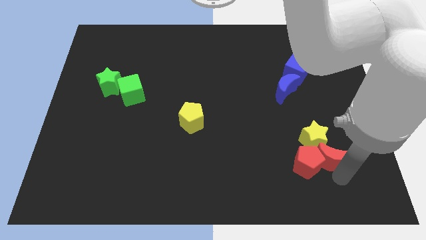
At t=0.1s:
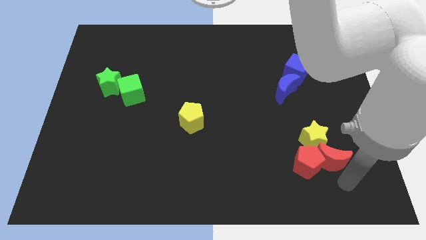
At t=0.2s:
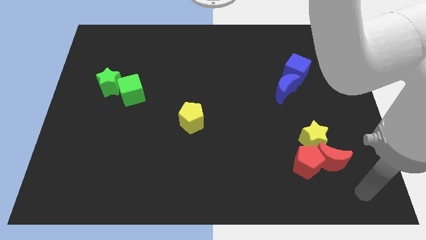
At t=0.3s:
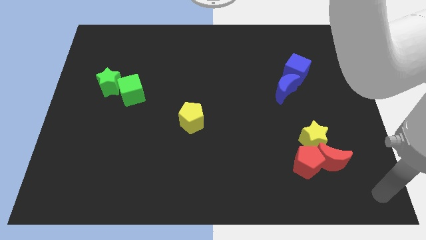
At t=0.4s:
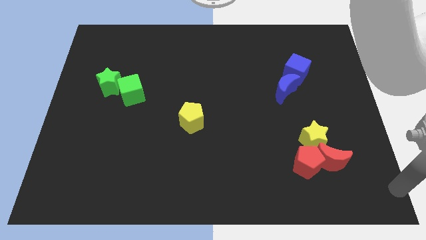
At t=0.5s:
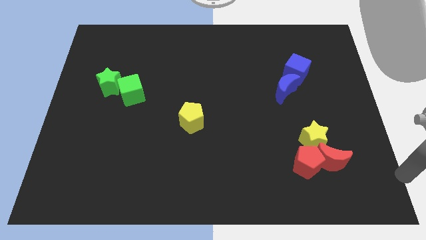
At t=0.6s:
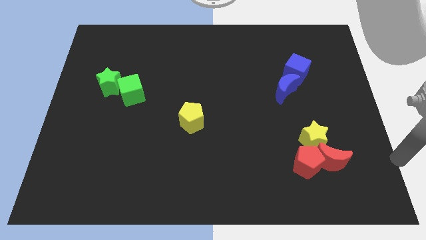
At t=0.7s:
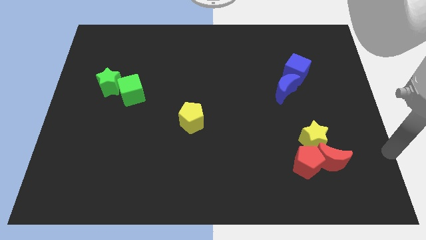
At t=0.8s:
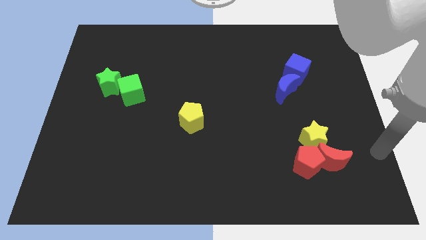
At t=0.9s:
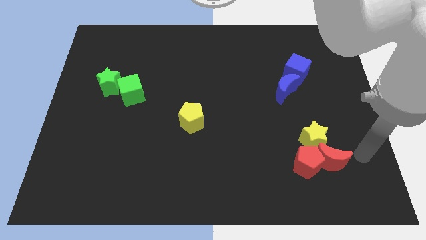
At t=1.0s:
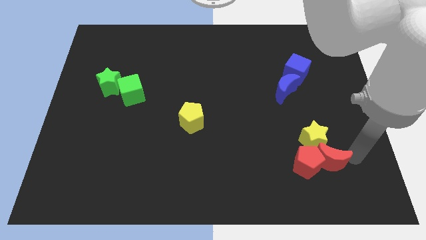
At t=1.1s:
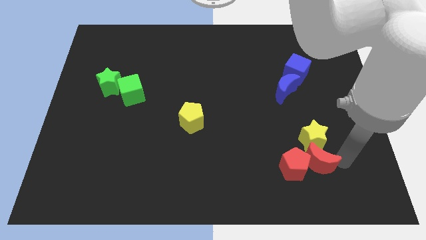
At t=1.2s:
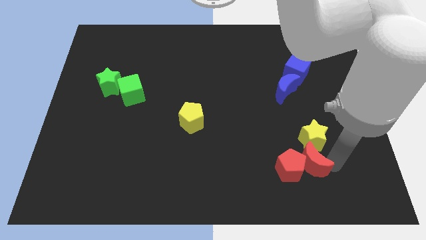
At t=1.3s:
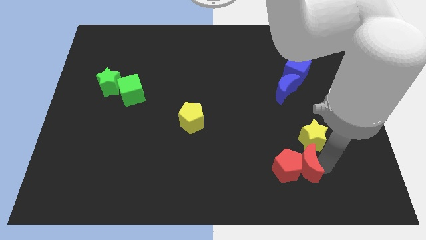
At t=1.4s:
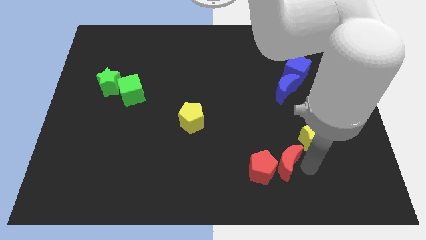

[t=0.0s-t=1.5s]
push the red crescent along with the red pentagon slightly to the left

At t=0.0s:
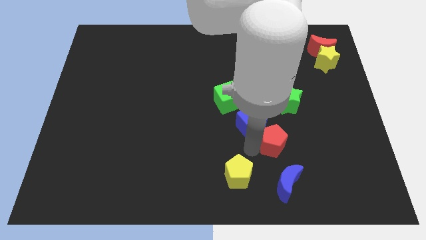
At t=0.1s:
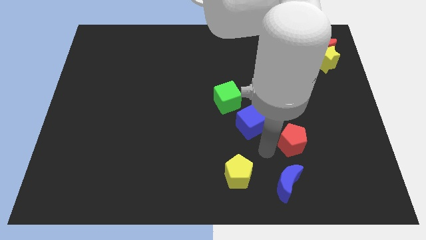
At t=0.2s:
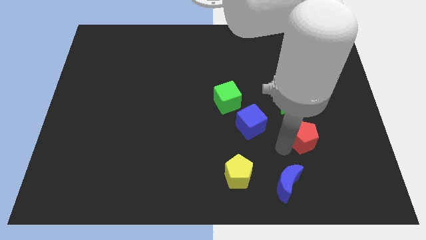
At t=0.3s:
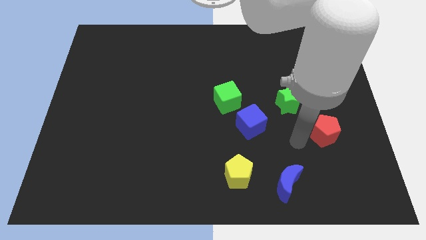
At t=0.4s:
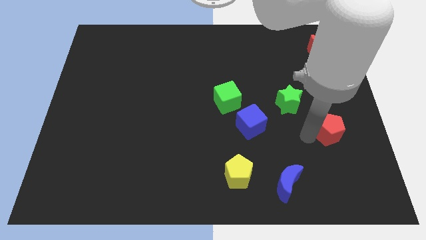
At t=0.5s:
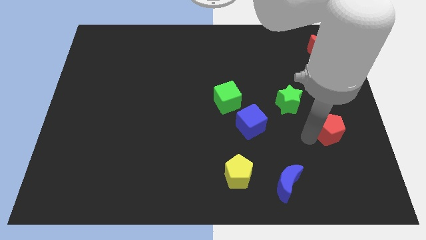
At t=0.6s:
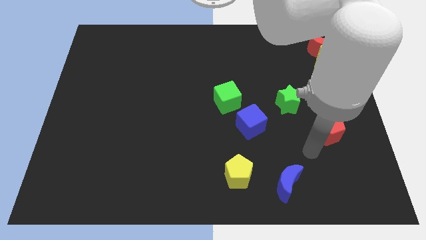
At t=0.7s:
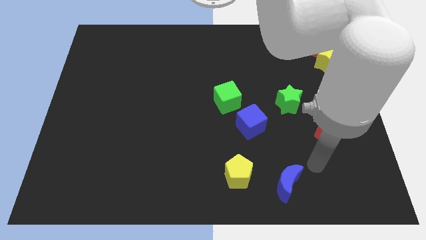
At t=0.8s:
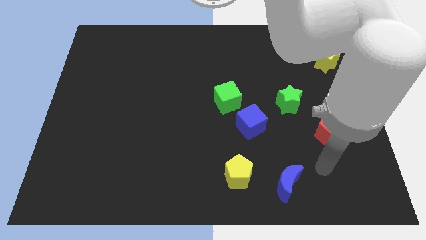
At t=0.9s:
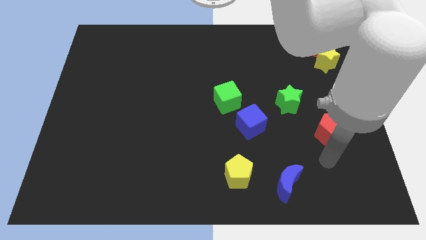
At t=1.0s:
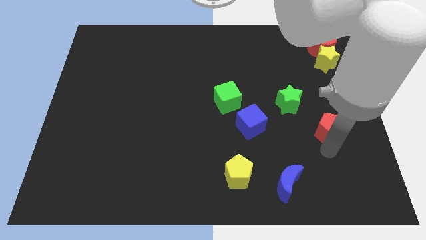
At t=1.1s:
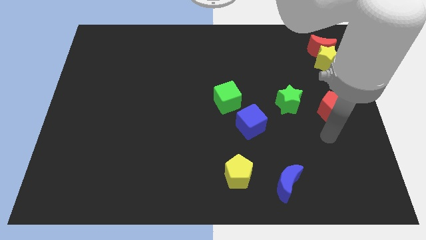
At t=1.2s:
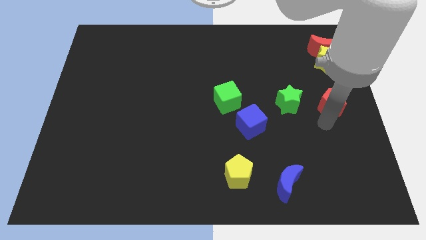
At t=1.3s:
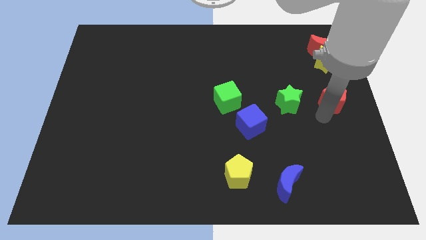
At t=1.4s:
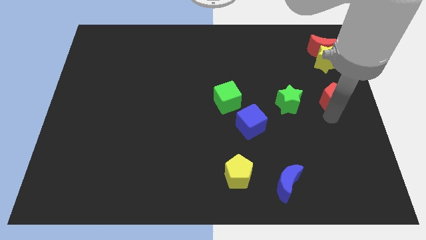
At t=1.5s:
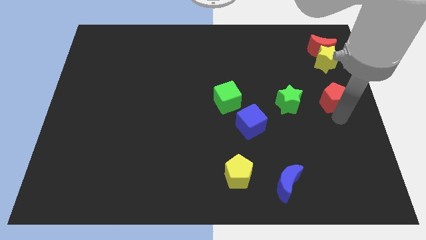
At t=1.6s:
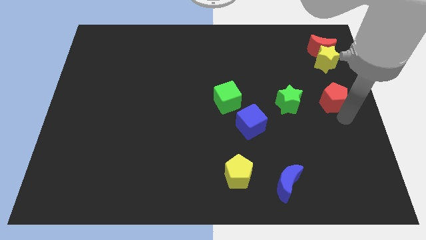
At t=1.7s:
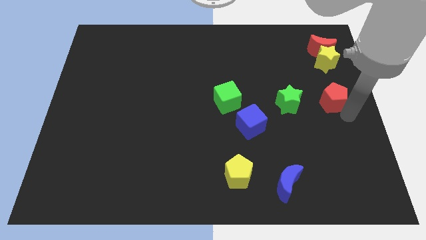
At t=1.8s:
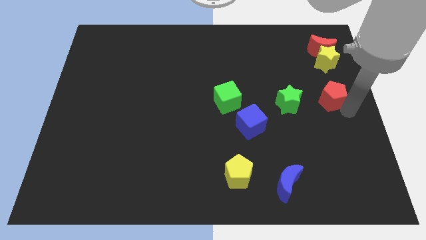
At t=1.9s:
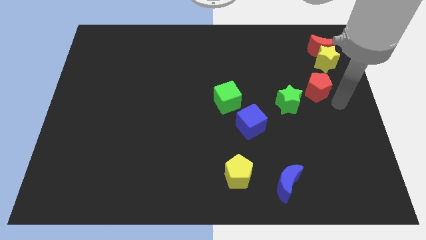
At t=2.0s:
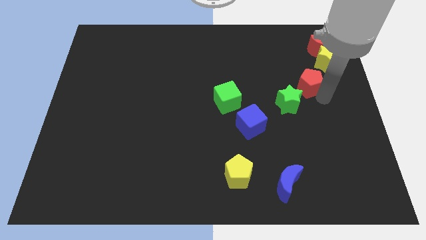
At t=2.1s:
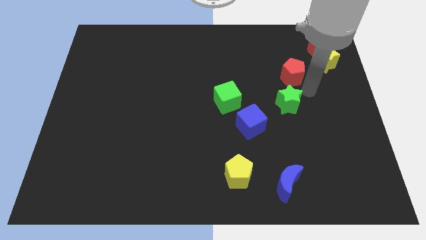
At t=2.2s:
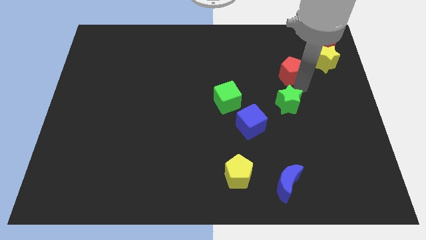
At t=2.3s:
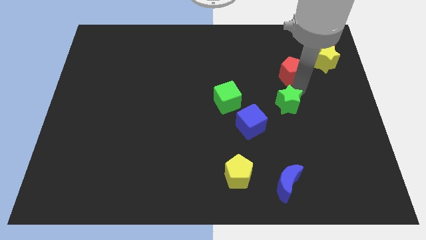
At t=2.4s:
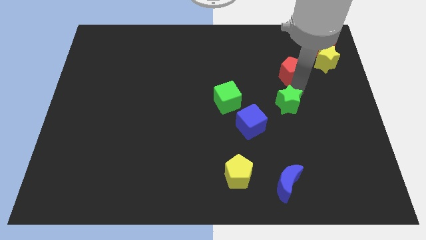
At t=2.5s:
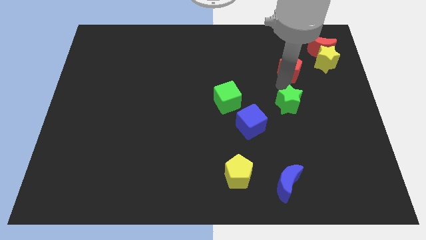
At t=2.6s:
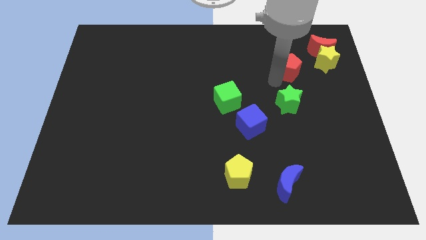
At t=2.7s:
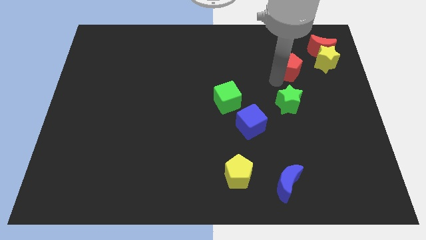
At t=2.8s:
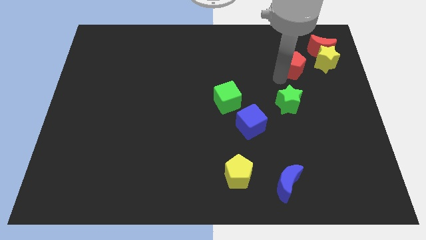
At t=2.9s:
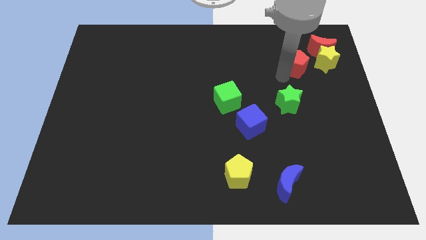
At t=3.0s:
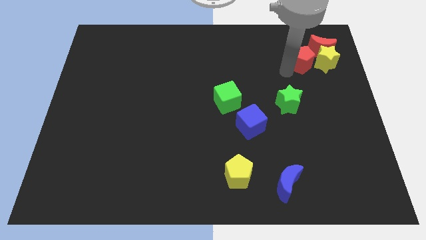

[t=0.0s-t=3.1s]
place red pentagon to left of yellow star

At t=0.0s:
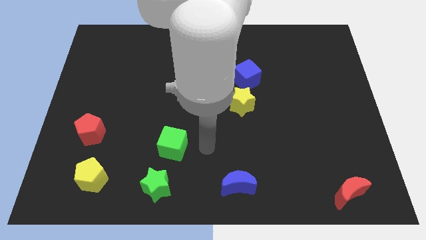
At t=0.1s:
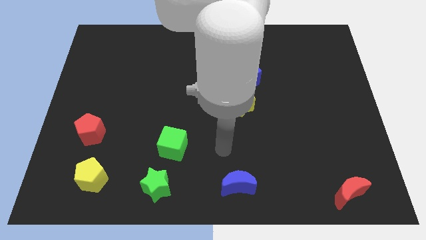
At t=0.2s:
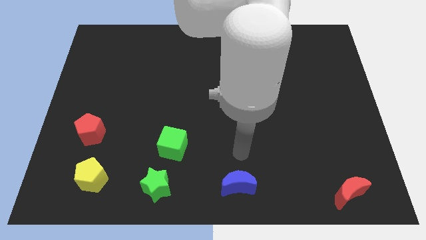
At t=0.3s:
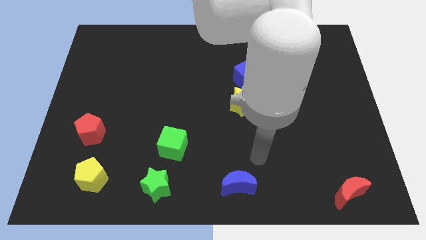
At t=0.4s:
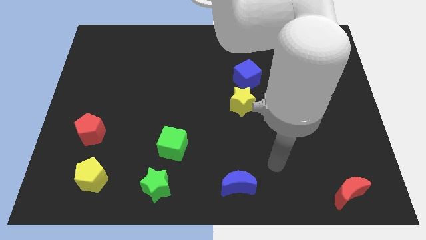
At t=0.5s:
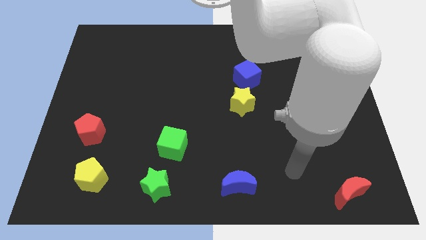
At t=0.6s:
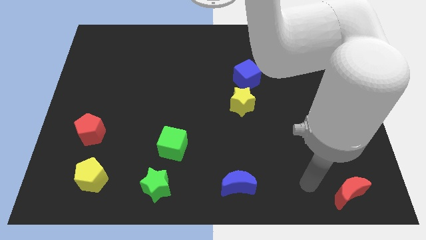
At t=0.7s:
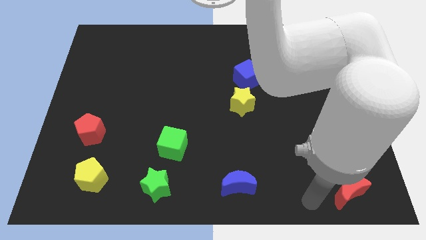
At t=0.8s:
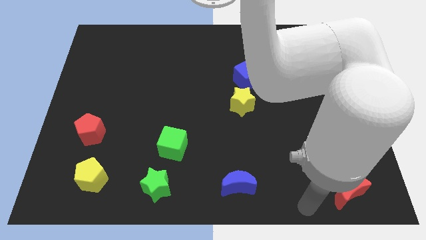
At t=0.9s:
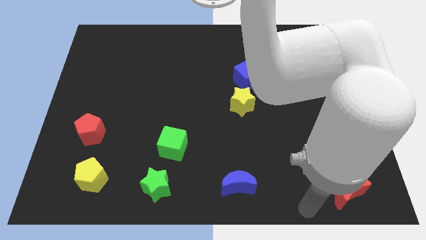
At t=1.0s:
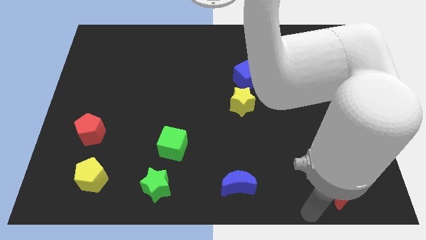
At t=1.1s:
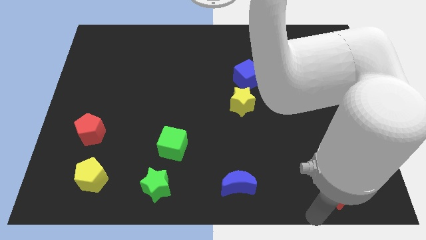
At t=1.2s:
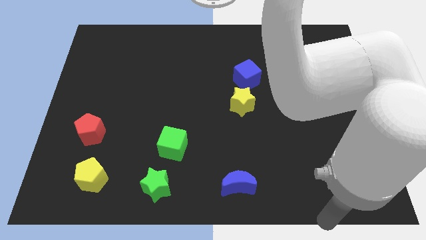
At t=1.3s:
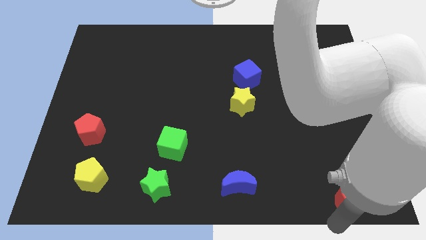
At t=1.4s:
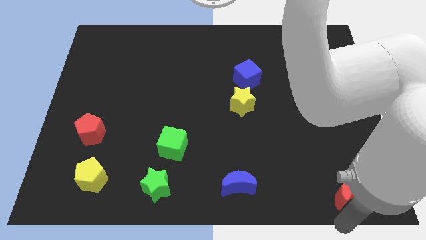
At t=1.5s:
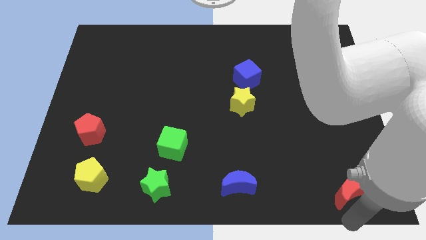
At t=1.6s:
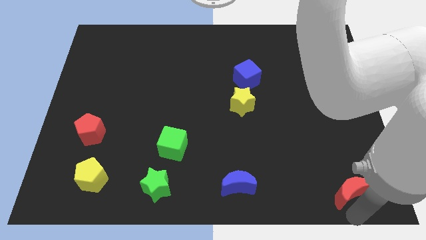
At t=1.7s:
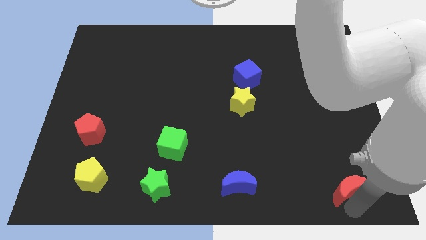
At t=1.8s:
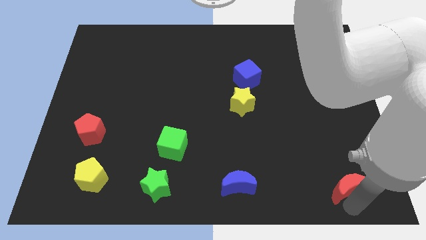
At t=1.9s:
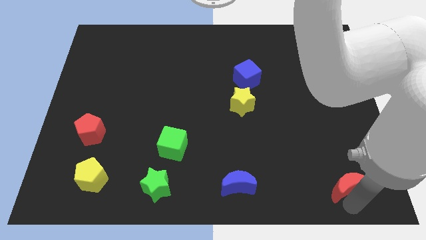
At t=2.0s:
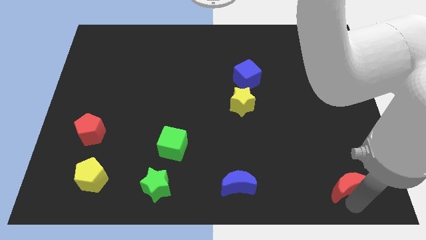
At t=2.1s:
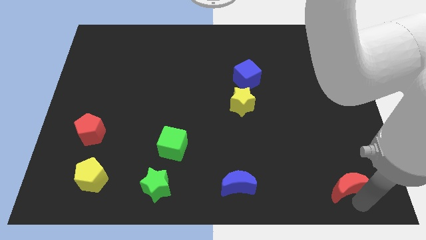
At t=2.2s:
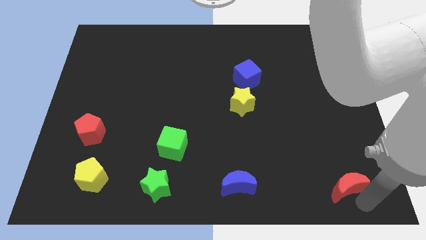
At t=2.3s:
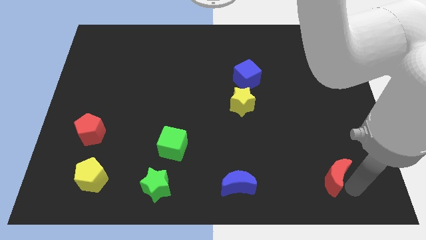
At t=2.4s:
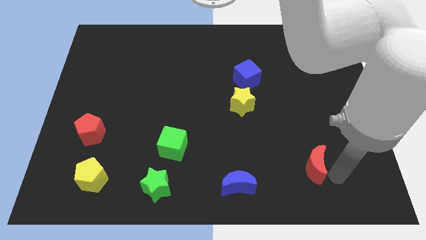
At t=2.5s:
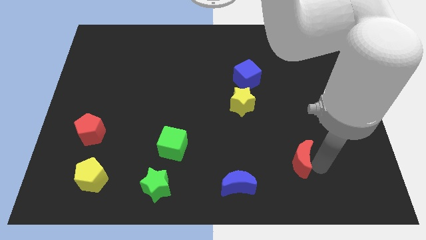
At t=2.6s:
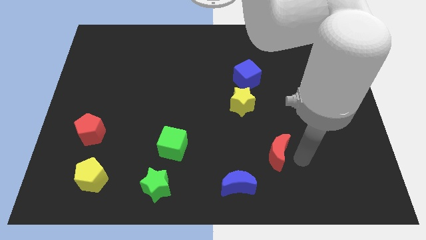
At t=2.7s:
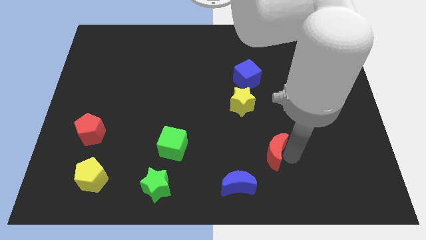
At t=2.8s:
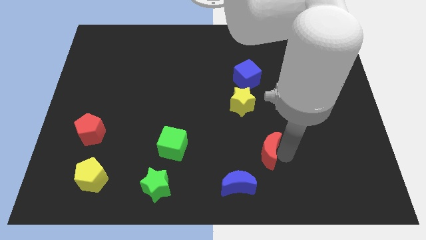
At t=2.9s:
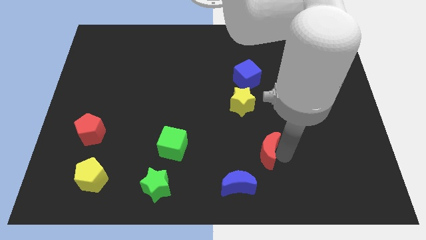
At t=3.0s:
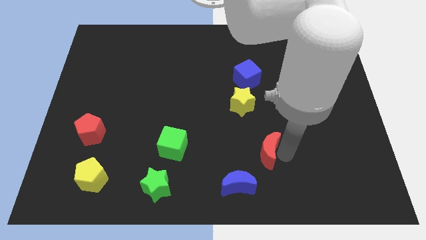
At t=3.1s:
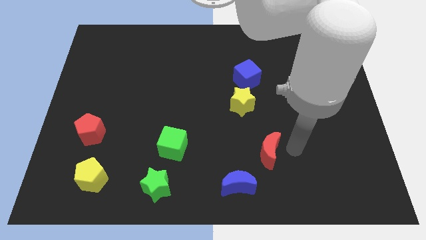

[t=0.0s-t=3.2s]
put the red crescent to the right of the green cube

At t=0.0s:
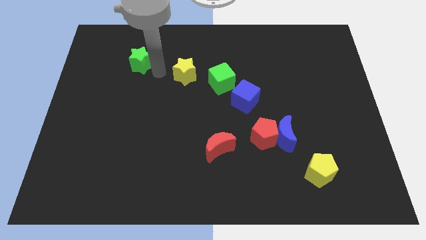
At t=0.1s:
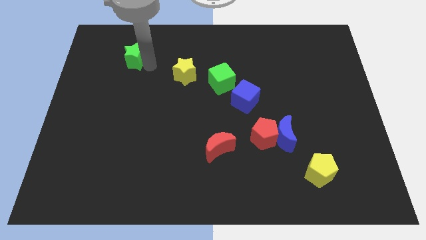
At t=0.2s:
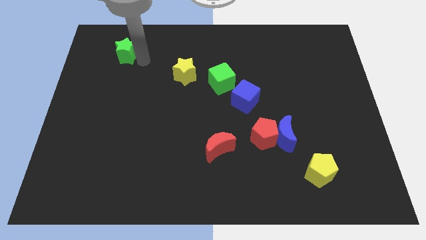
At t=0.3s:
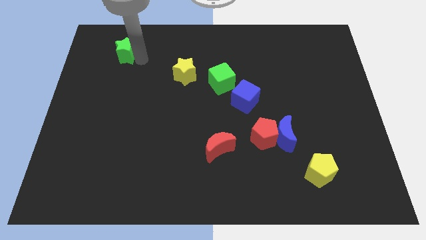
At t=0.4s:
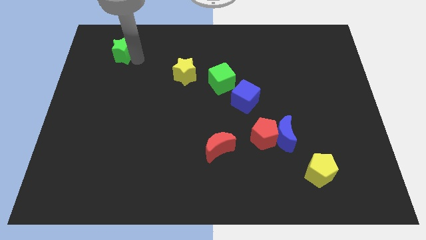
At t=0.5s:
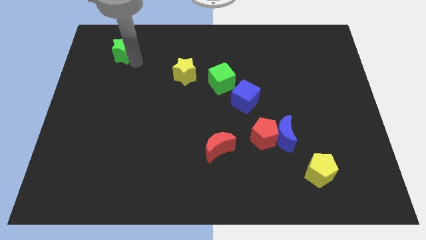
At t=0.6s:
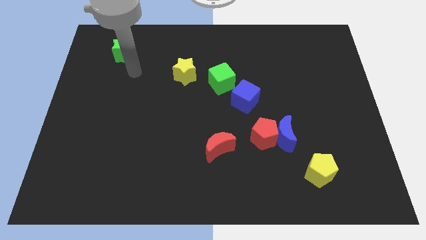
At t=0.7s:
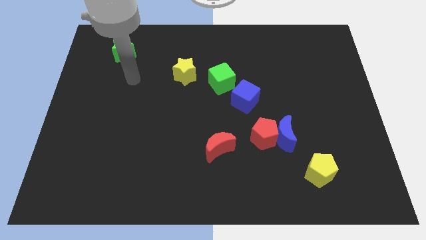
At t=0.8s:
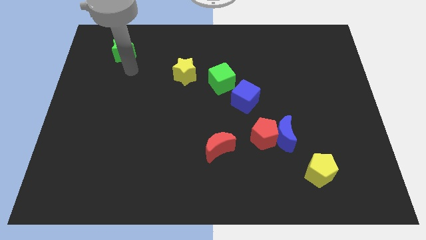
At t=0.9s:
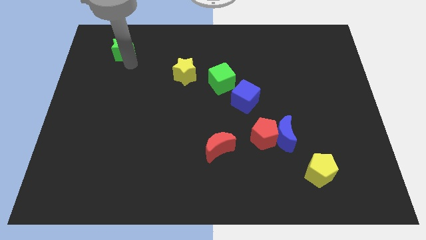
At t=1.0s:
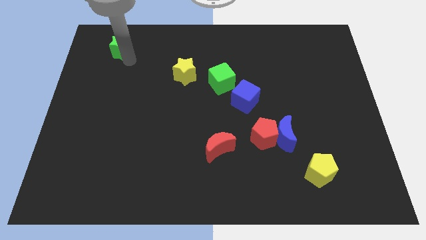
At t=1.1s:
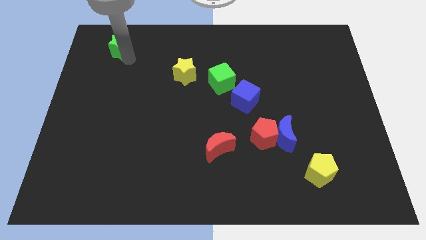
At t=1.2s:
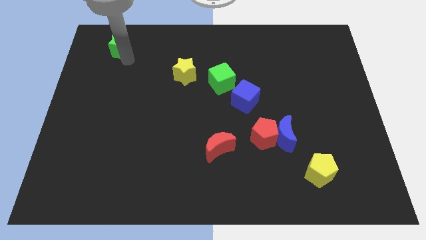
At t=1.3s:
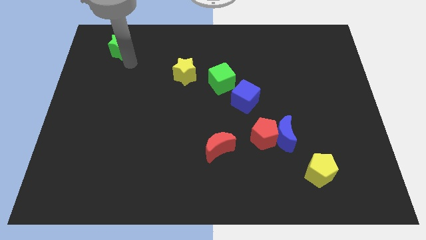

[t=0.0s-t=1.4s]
drag the green star towards the top left side of the board
